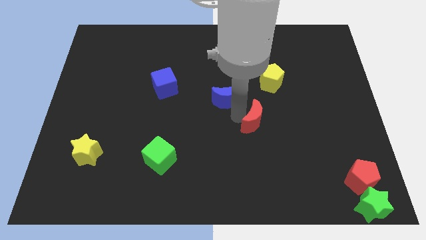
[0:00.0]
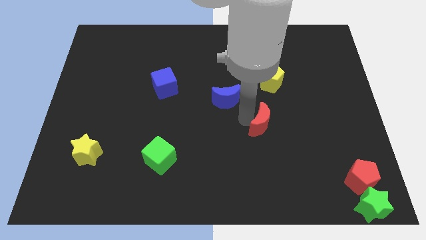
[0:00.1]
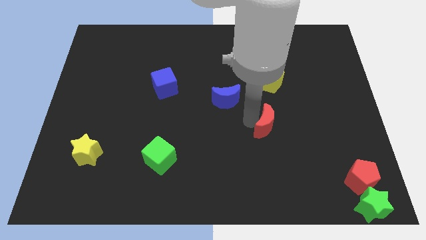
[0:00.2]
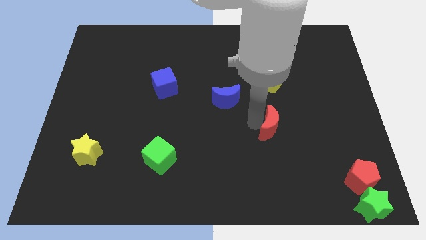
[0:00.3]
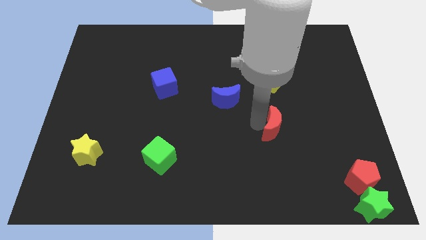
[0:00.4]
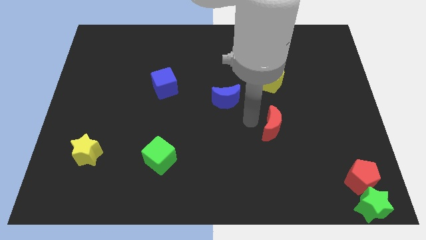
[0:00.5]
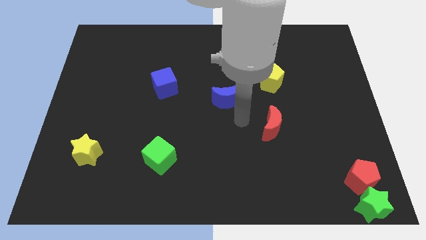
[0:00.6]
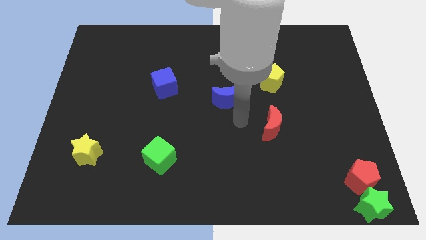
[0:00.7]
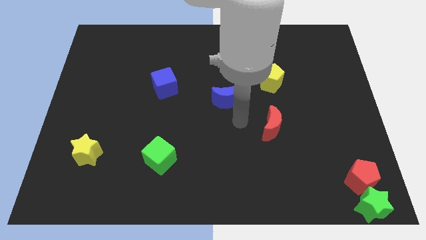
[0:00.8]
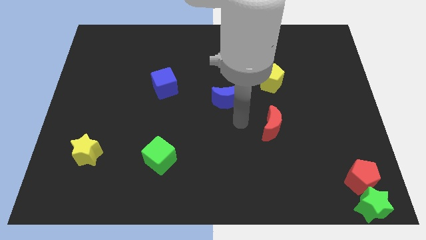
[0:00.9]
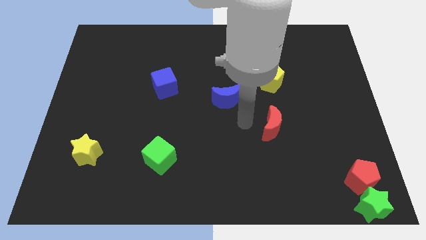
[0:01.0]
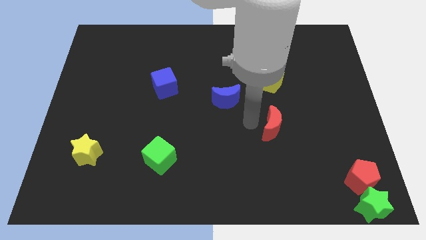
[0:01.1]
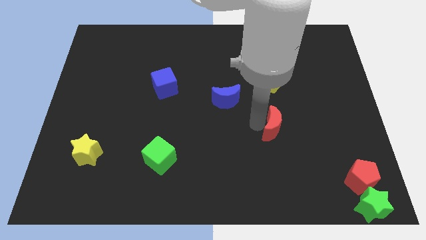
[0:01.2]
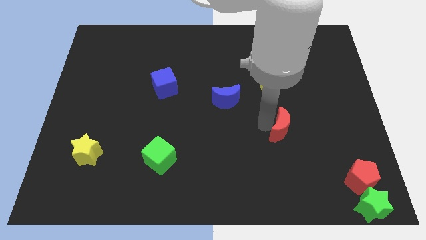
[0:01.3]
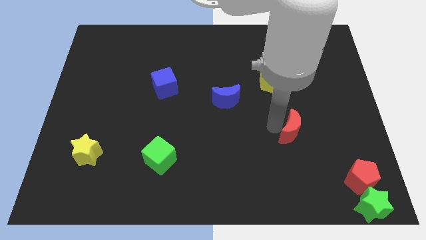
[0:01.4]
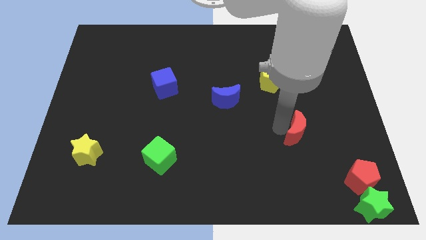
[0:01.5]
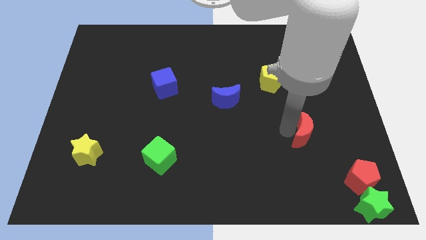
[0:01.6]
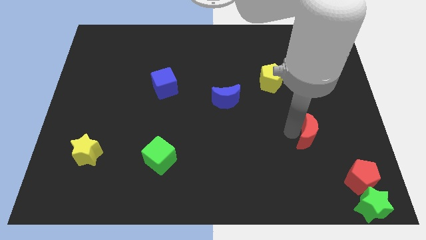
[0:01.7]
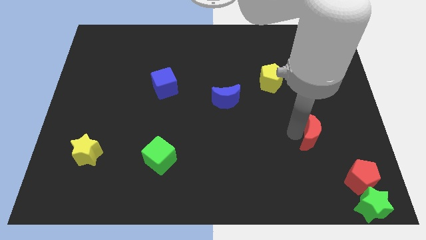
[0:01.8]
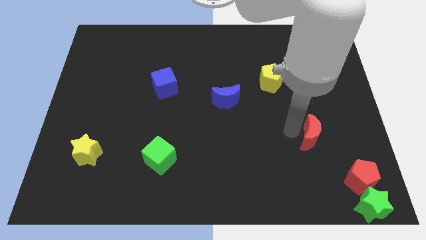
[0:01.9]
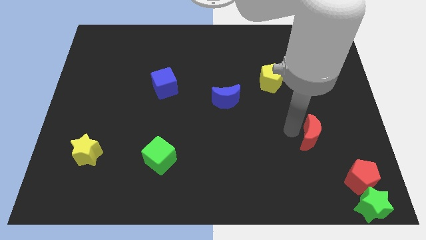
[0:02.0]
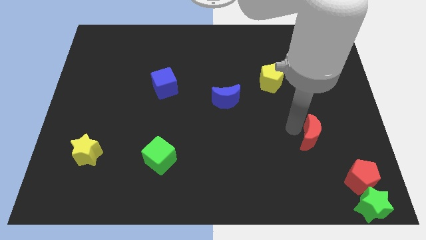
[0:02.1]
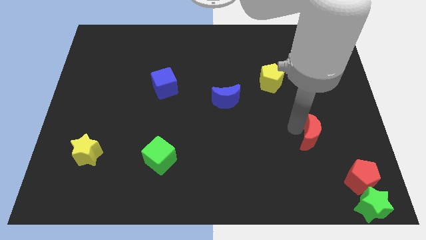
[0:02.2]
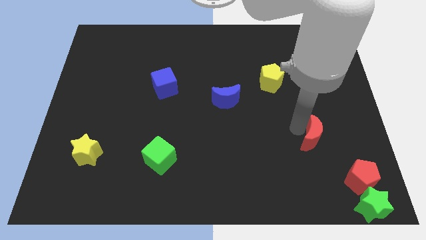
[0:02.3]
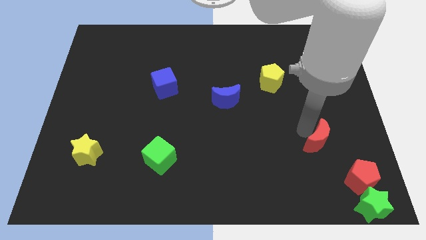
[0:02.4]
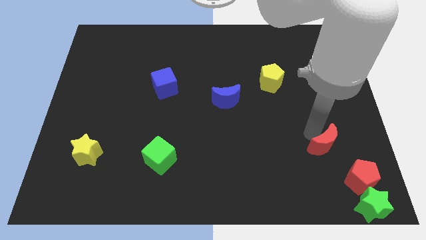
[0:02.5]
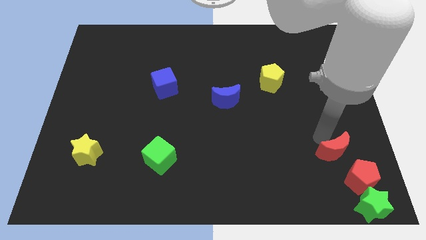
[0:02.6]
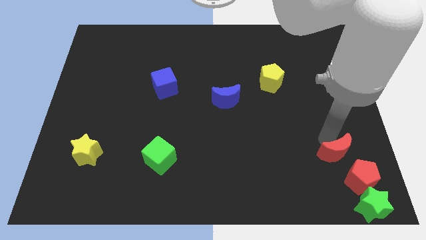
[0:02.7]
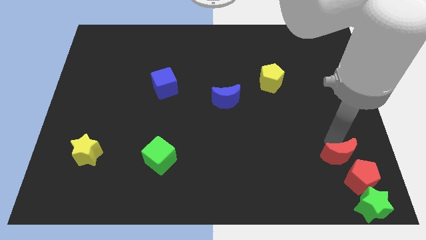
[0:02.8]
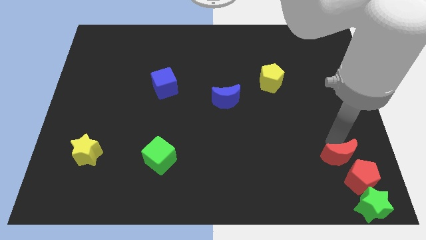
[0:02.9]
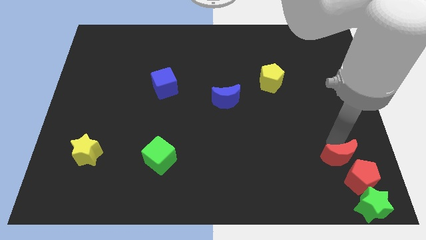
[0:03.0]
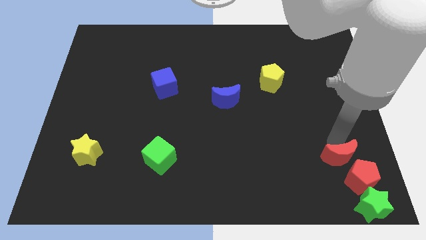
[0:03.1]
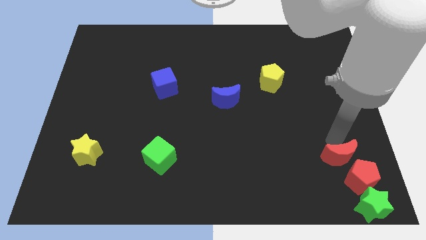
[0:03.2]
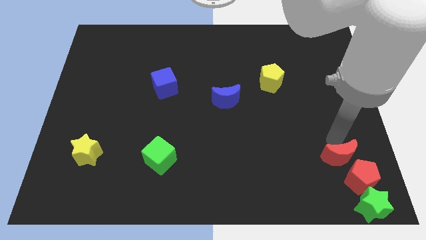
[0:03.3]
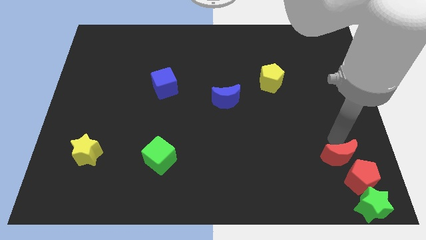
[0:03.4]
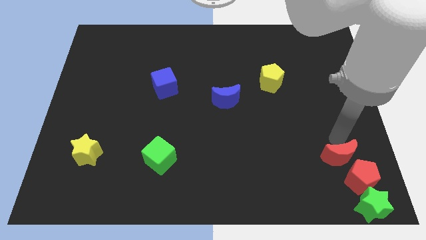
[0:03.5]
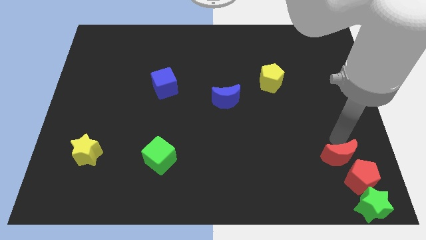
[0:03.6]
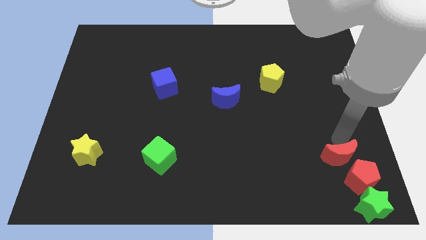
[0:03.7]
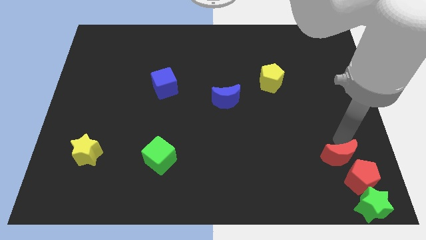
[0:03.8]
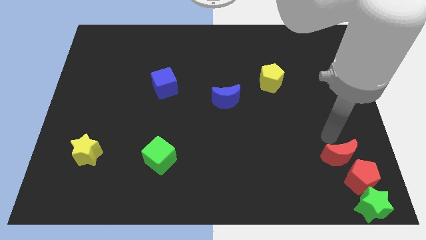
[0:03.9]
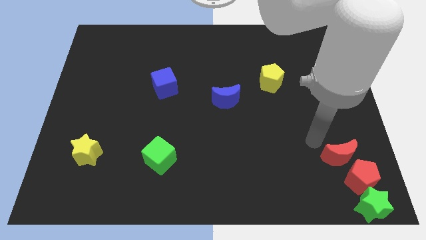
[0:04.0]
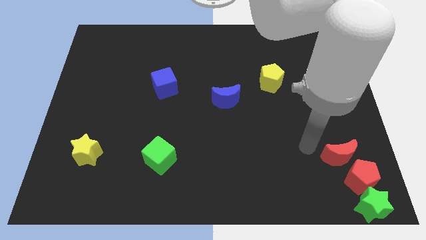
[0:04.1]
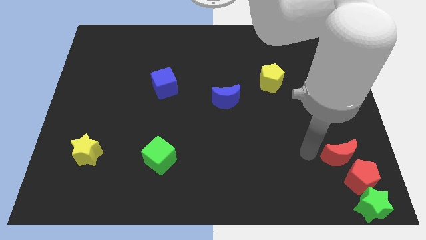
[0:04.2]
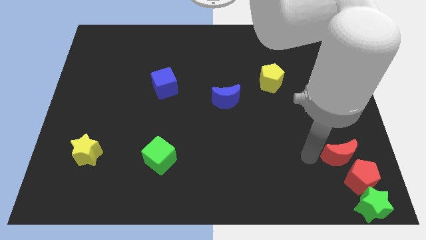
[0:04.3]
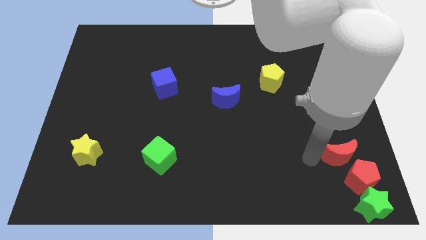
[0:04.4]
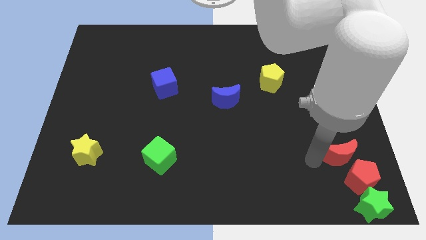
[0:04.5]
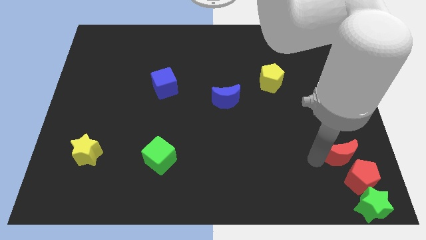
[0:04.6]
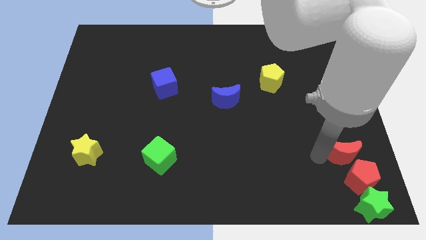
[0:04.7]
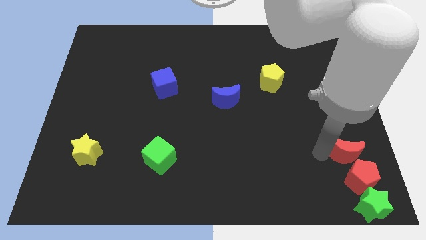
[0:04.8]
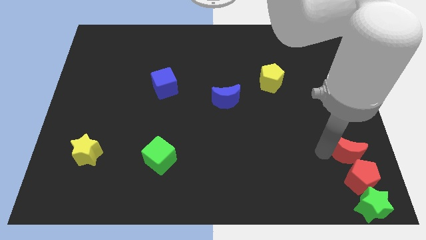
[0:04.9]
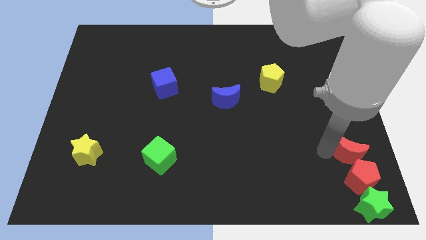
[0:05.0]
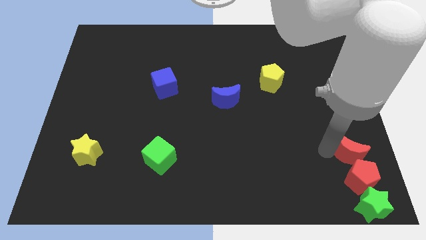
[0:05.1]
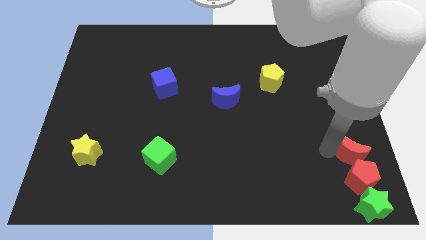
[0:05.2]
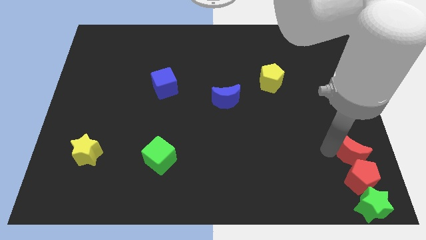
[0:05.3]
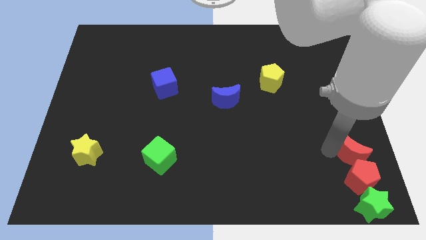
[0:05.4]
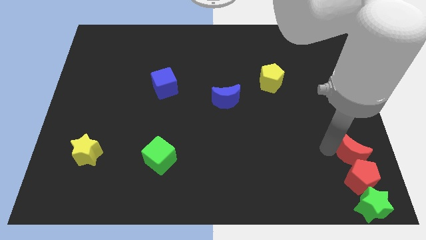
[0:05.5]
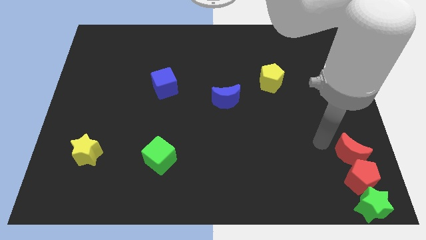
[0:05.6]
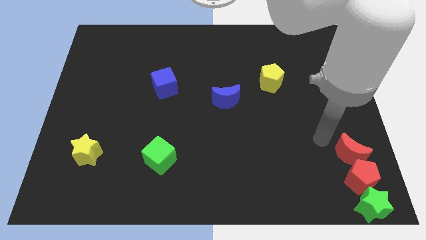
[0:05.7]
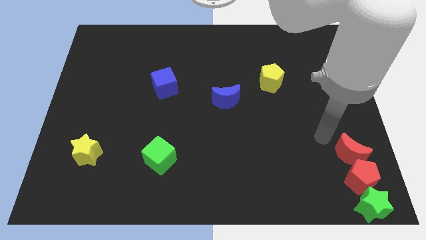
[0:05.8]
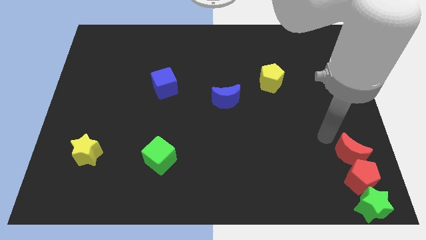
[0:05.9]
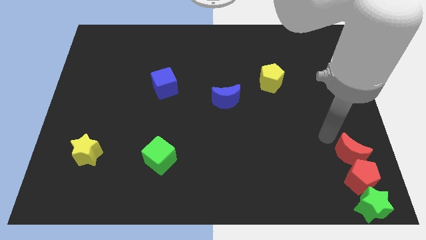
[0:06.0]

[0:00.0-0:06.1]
push the red moon to the top of the red pentagon

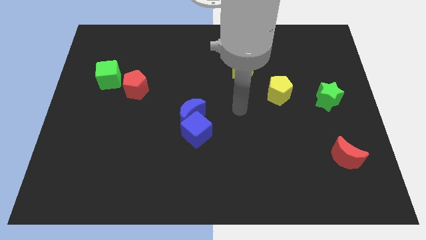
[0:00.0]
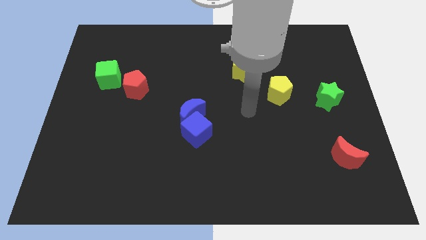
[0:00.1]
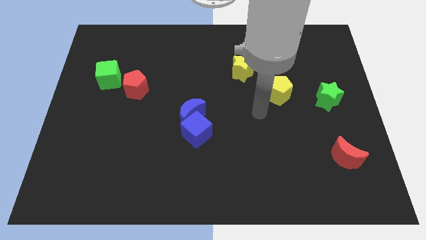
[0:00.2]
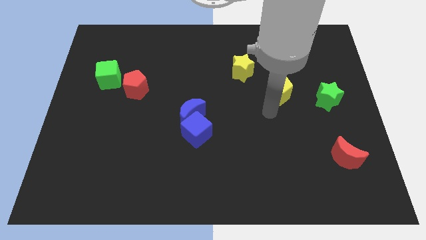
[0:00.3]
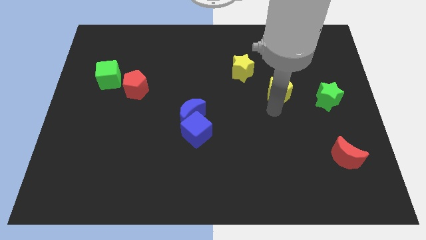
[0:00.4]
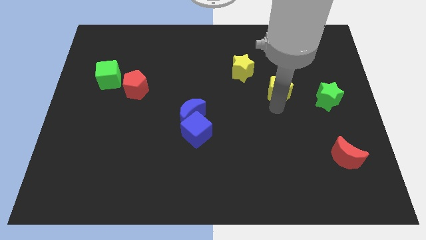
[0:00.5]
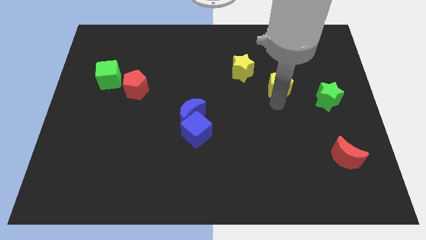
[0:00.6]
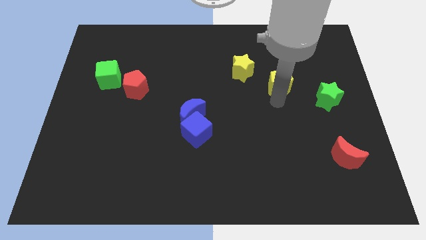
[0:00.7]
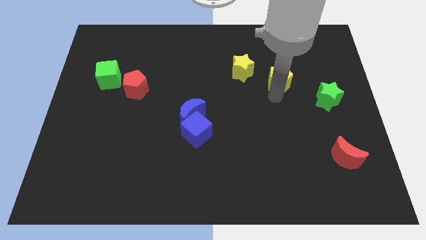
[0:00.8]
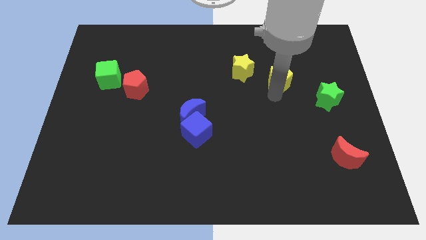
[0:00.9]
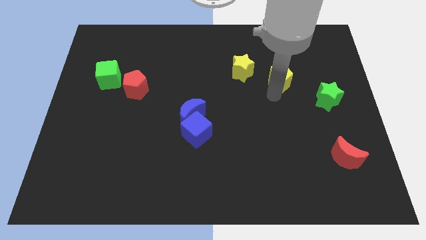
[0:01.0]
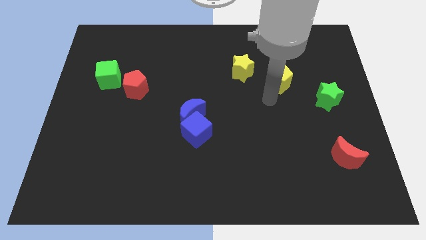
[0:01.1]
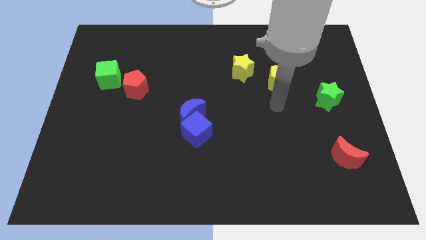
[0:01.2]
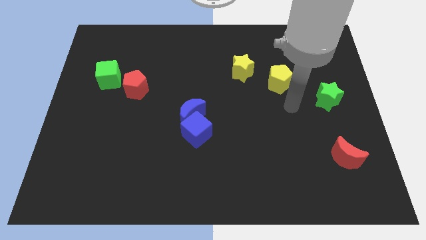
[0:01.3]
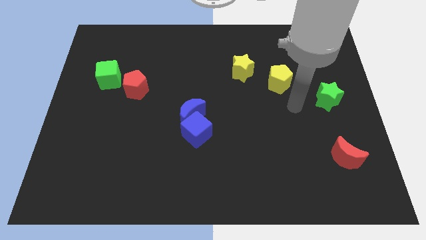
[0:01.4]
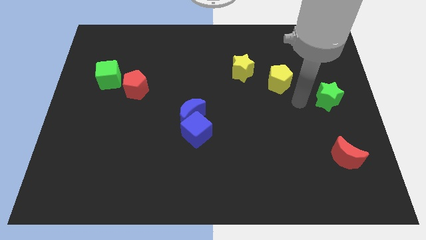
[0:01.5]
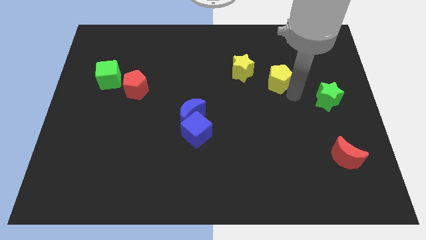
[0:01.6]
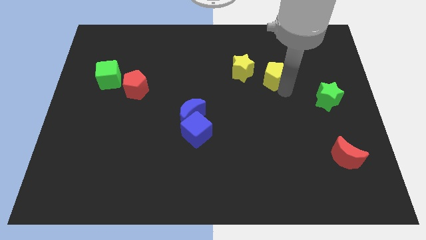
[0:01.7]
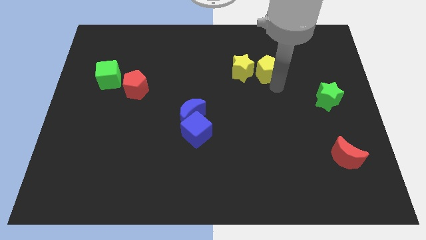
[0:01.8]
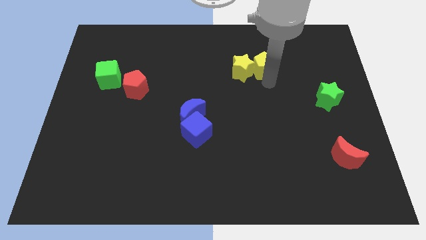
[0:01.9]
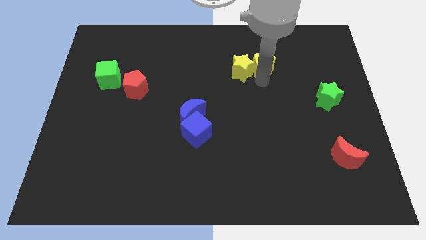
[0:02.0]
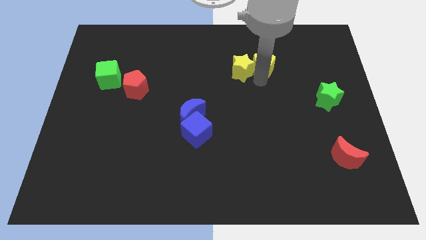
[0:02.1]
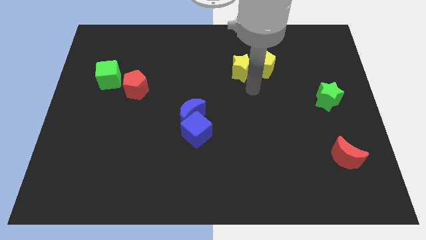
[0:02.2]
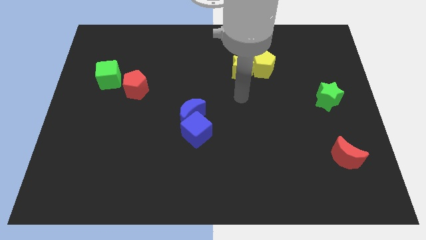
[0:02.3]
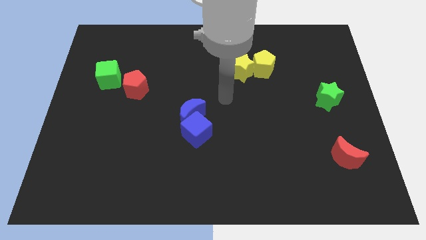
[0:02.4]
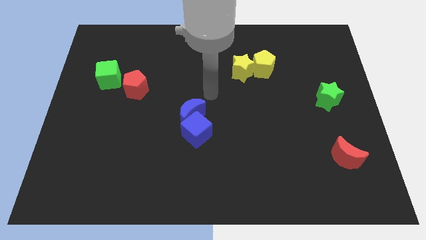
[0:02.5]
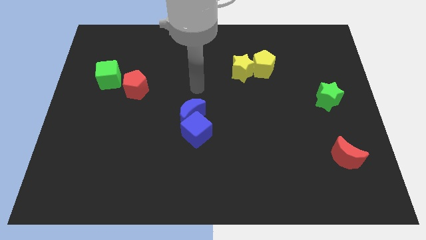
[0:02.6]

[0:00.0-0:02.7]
push the yellow pentagon into the yellow star

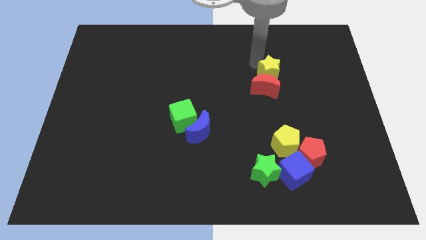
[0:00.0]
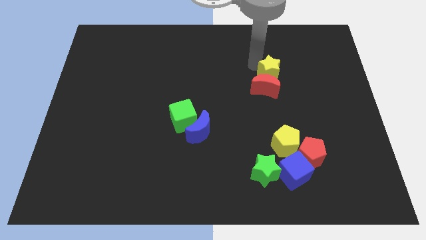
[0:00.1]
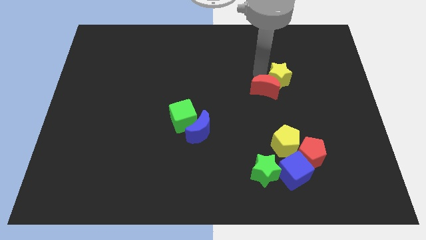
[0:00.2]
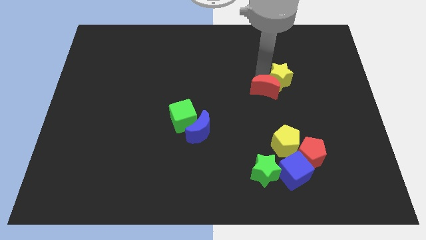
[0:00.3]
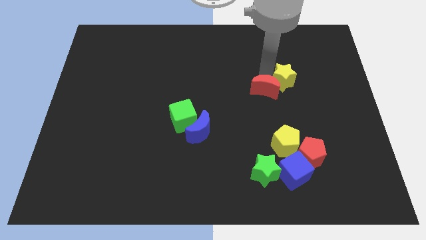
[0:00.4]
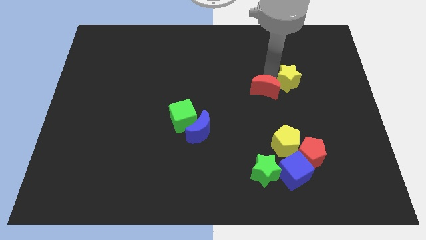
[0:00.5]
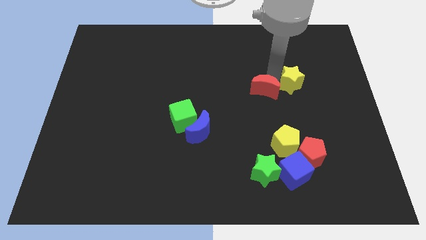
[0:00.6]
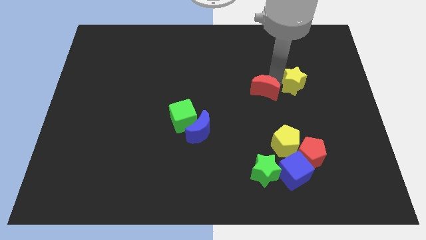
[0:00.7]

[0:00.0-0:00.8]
move the yellow star slightly away from the red crescent
